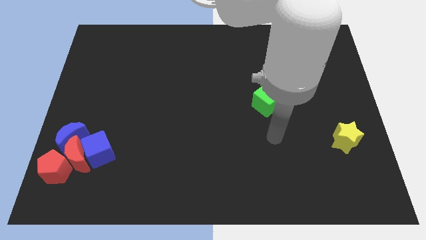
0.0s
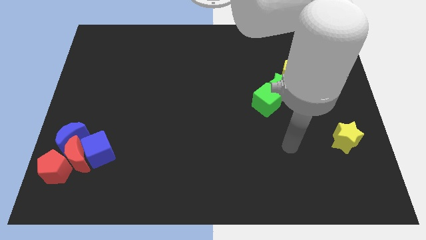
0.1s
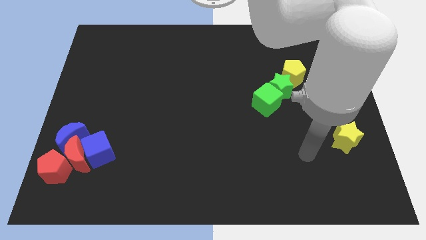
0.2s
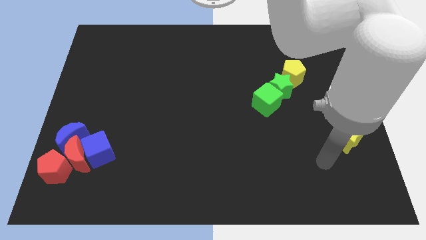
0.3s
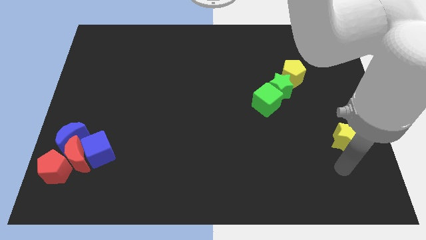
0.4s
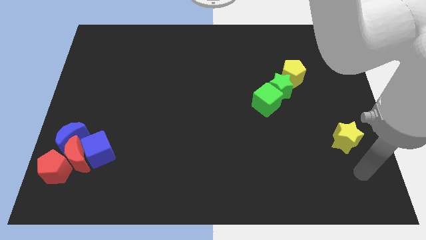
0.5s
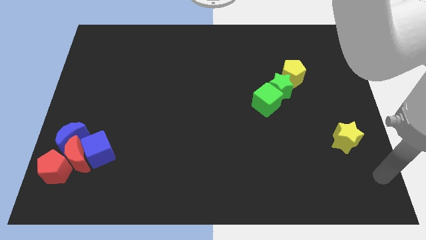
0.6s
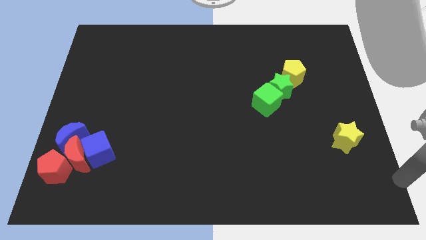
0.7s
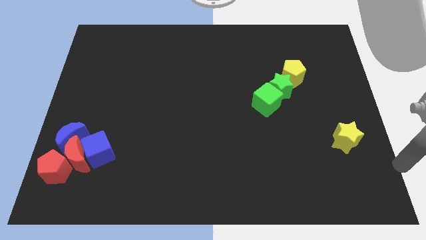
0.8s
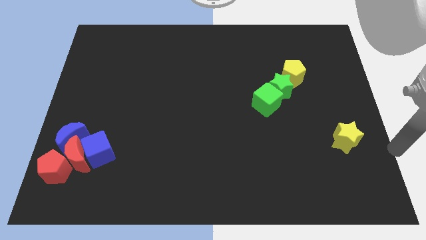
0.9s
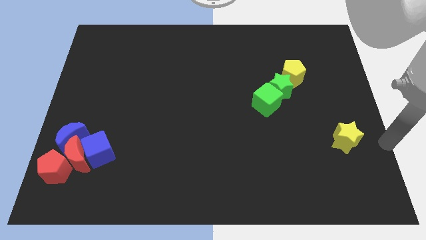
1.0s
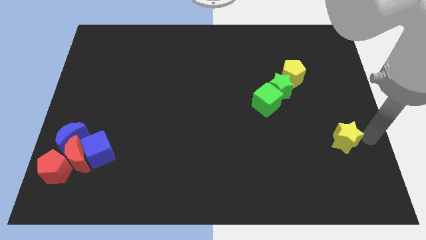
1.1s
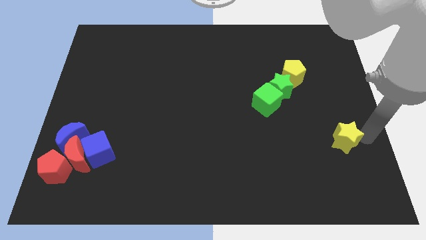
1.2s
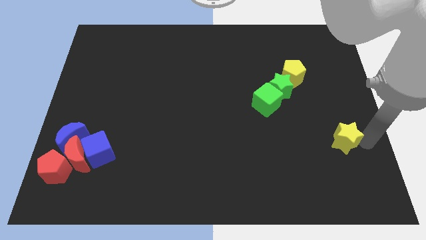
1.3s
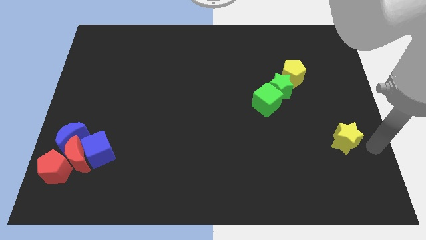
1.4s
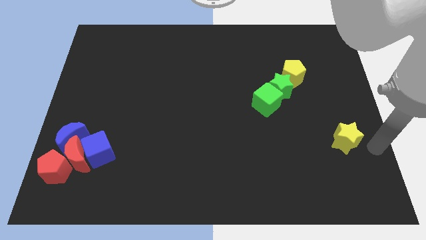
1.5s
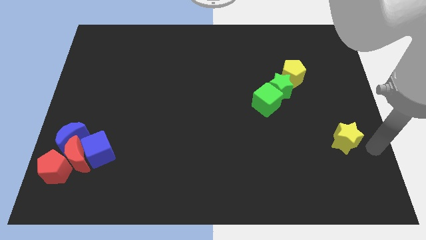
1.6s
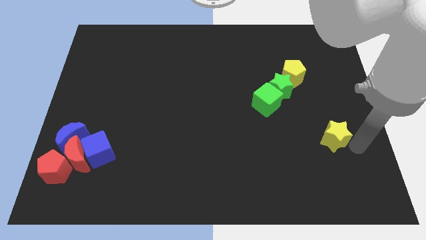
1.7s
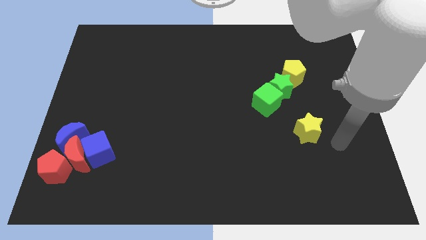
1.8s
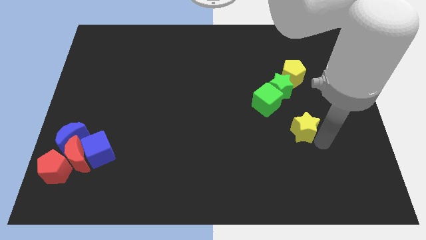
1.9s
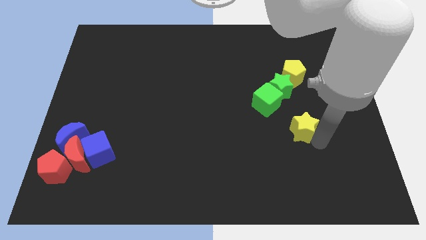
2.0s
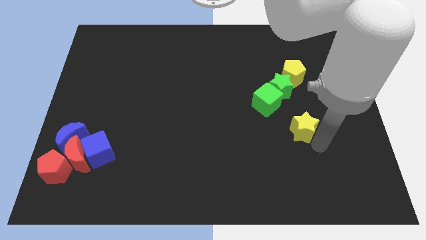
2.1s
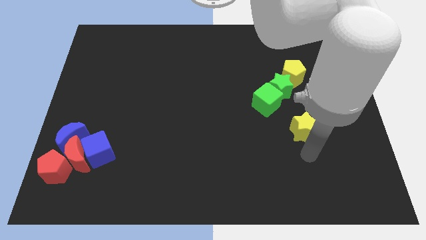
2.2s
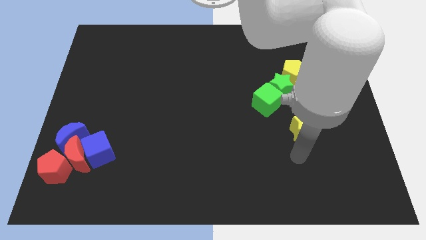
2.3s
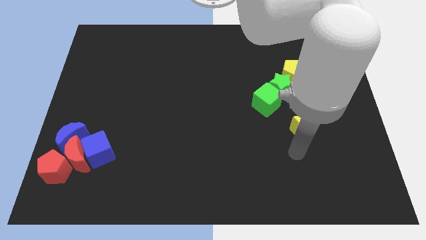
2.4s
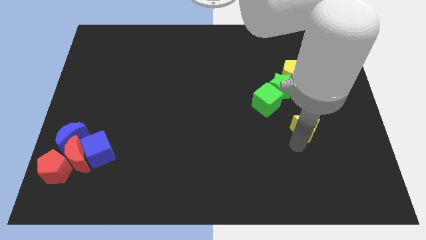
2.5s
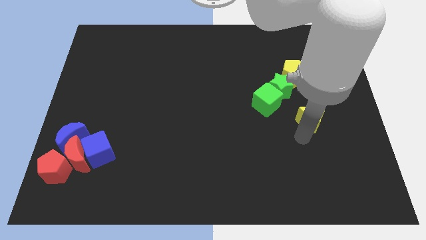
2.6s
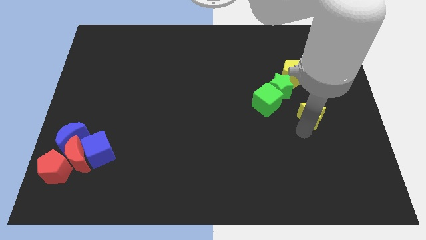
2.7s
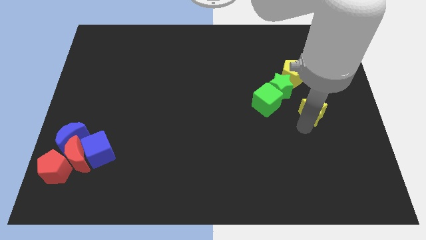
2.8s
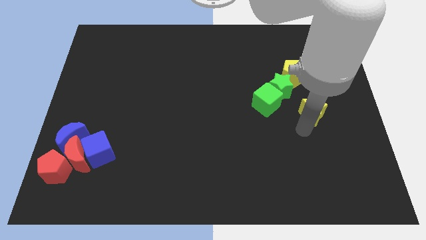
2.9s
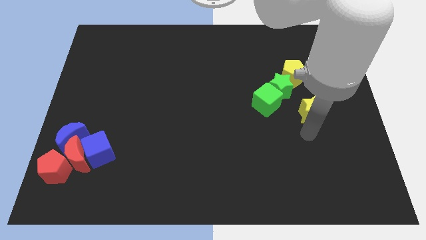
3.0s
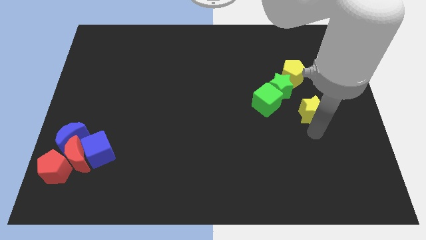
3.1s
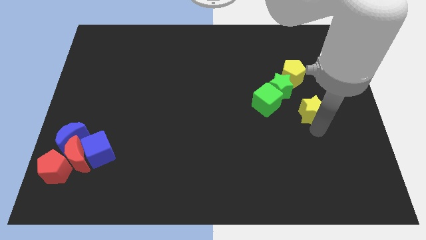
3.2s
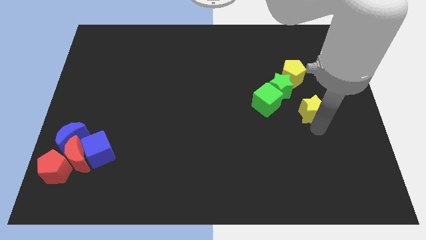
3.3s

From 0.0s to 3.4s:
place the yellow star below the green star

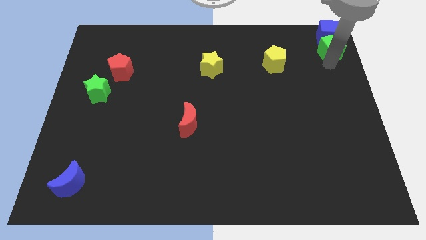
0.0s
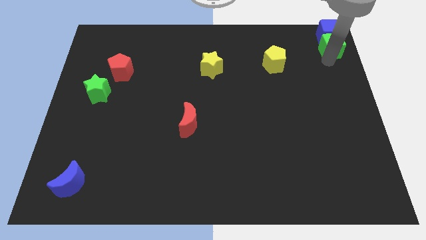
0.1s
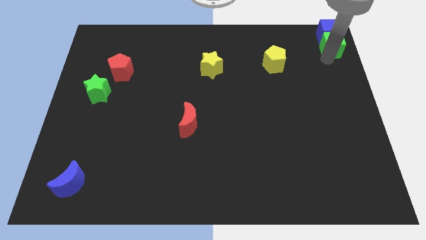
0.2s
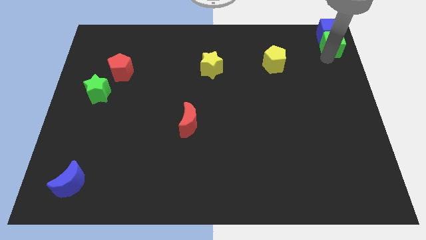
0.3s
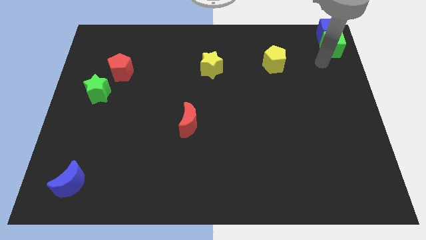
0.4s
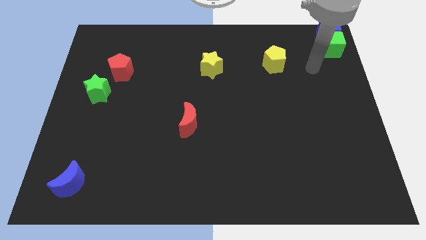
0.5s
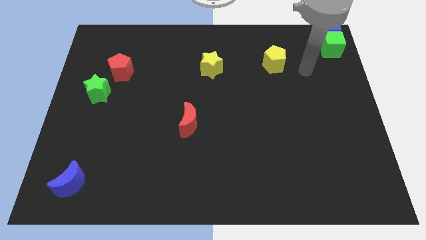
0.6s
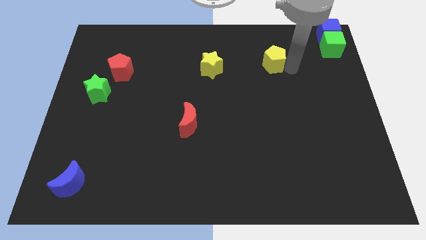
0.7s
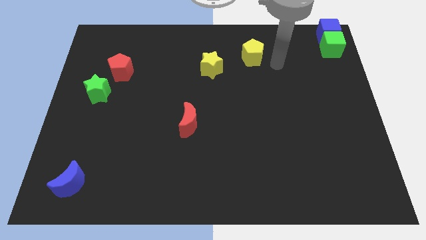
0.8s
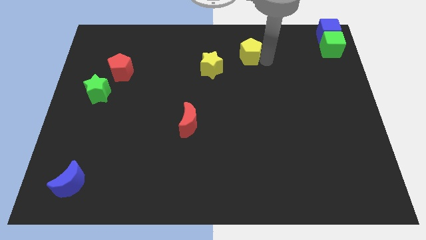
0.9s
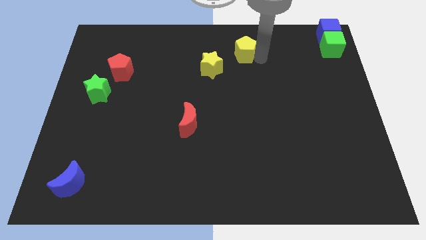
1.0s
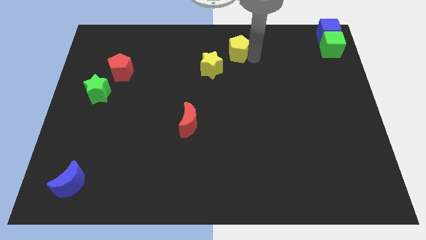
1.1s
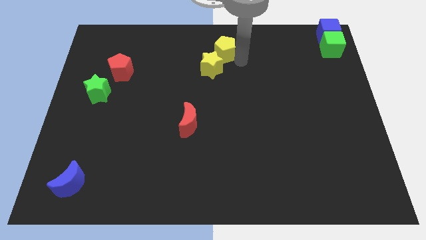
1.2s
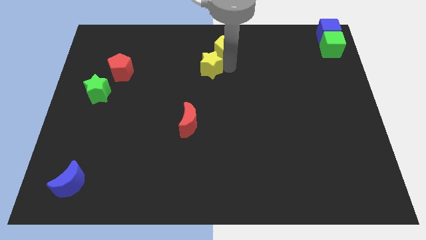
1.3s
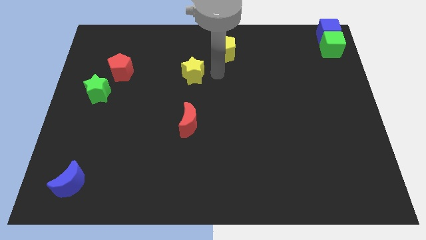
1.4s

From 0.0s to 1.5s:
slide the yellow pentagon at the top right side of the yellow star

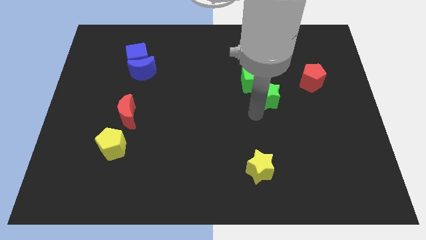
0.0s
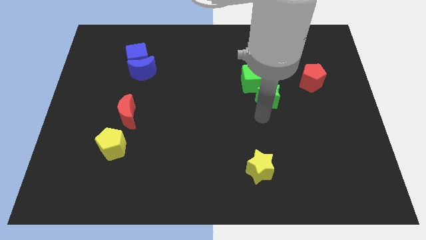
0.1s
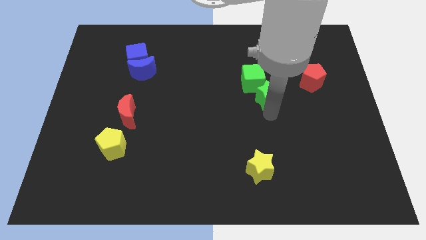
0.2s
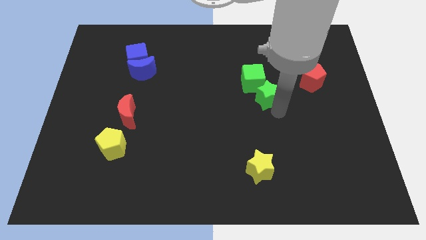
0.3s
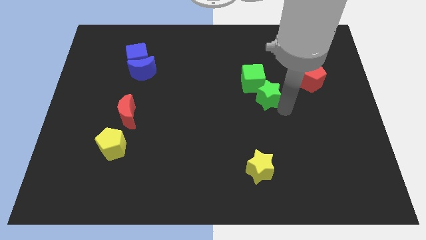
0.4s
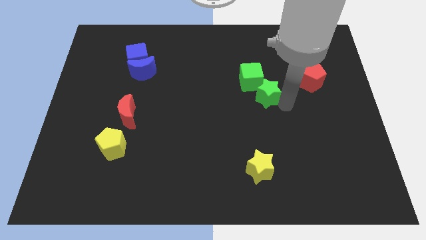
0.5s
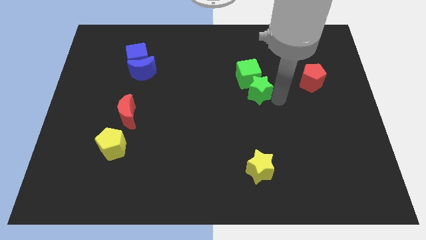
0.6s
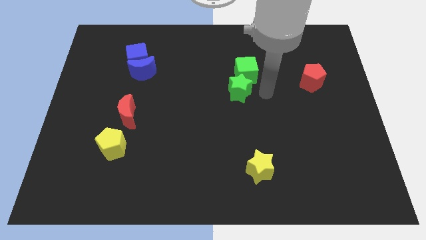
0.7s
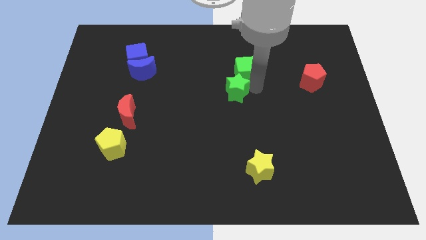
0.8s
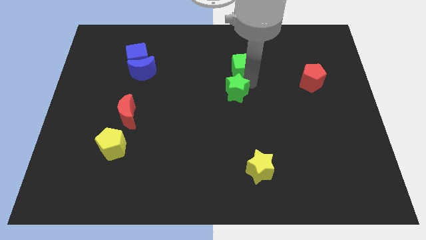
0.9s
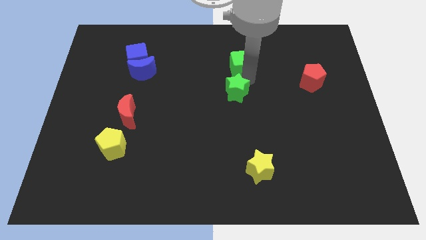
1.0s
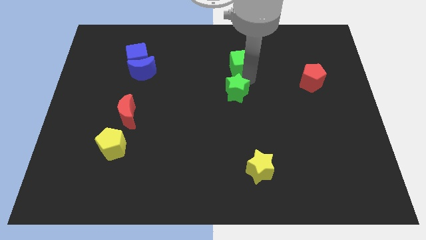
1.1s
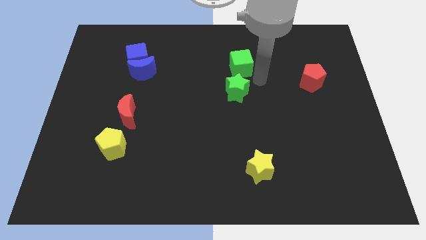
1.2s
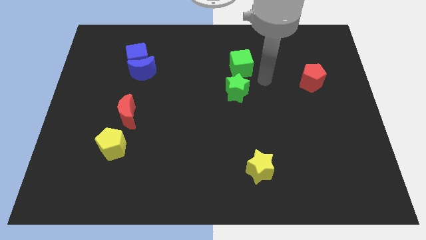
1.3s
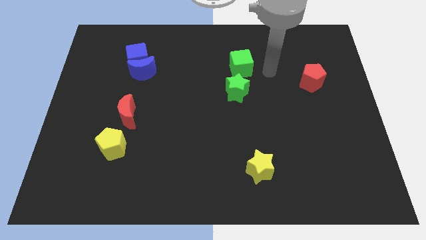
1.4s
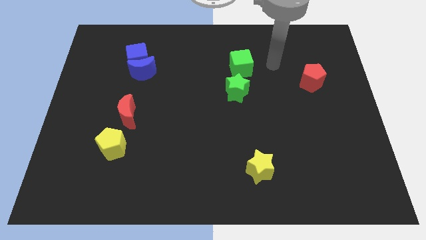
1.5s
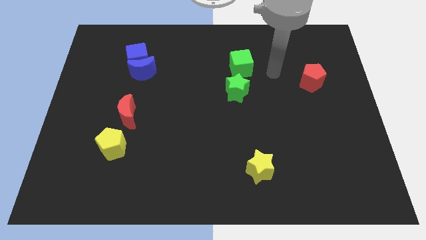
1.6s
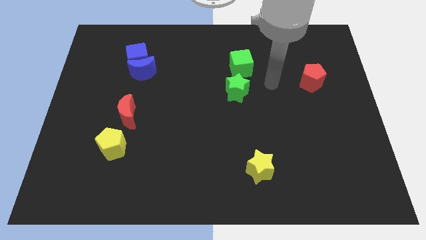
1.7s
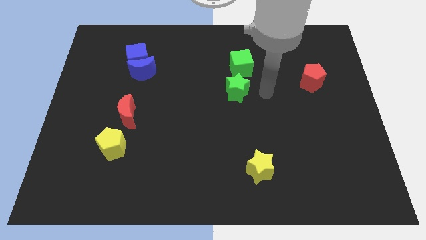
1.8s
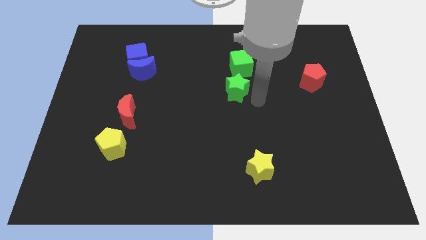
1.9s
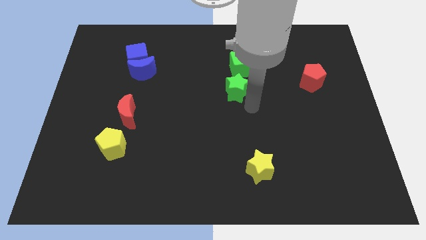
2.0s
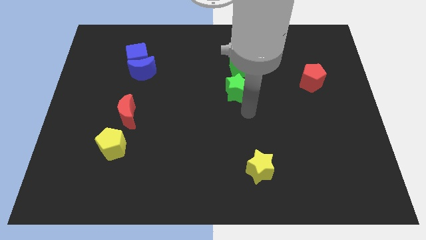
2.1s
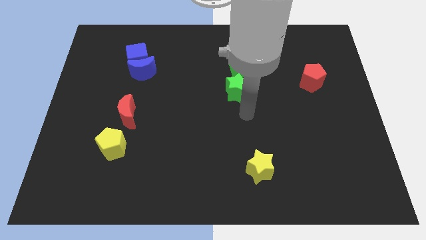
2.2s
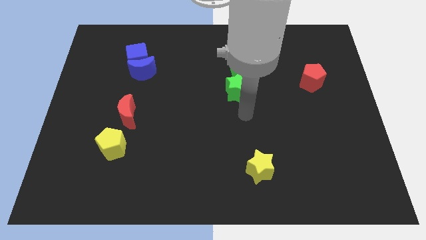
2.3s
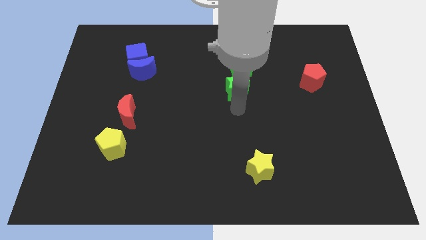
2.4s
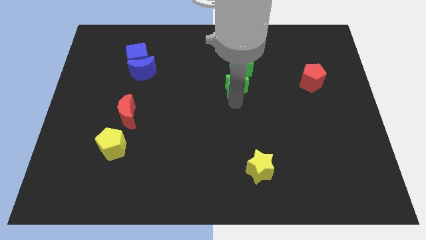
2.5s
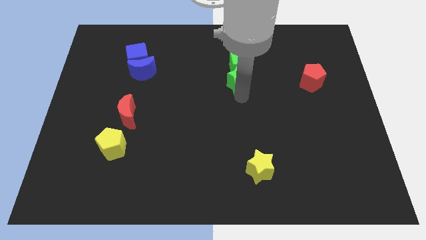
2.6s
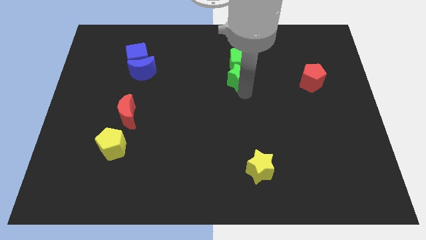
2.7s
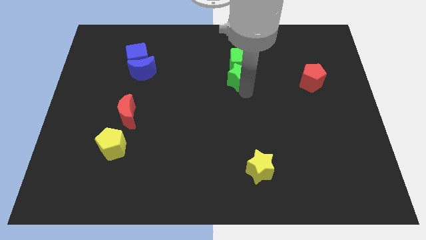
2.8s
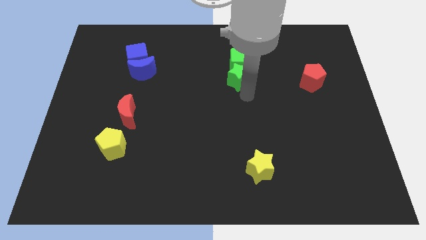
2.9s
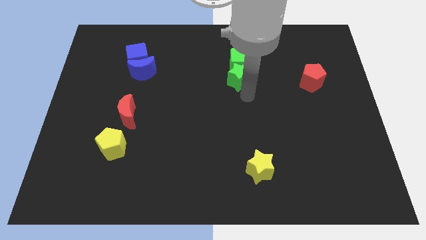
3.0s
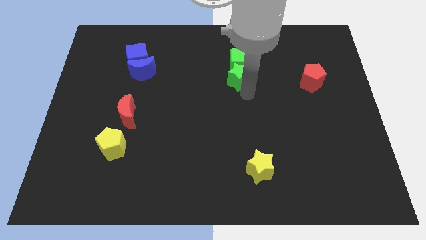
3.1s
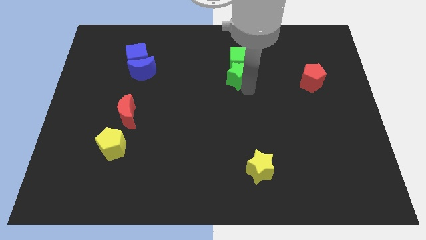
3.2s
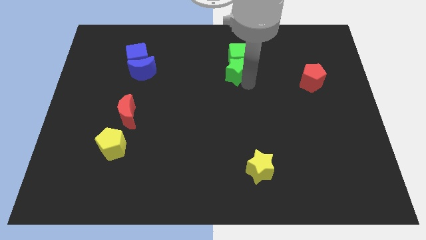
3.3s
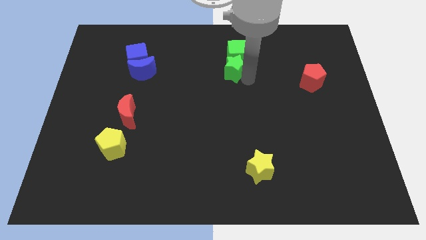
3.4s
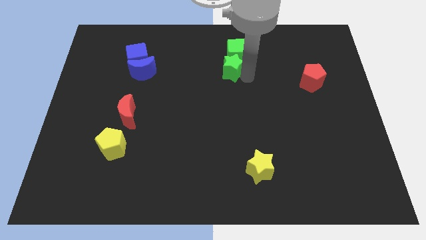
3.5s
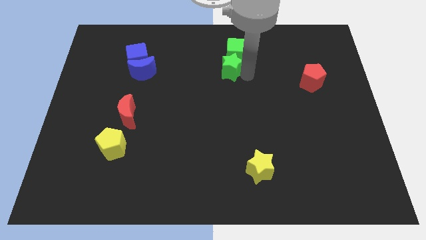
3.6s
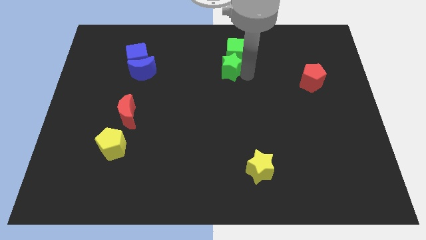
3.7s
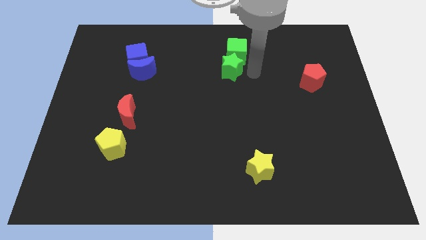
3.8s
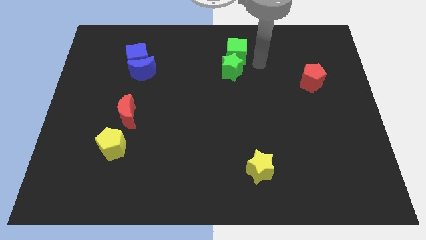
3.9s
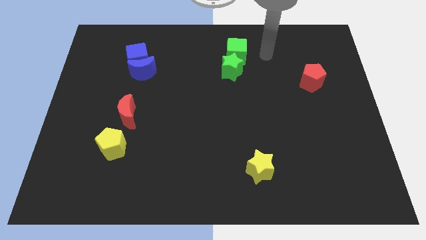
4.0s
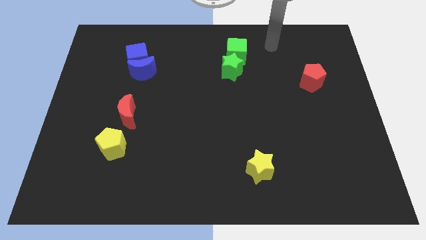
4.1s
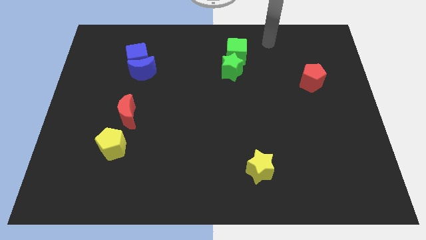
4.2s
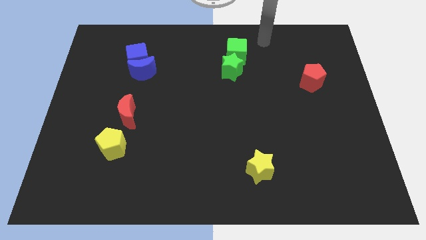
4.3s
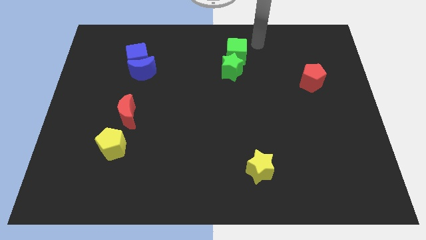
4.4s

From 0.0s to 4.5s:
put the green blocks in between the blue blocks and red pentagon
